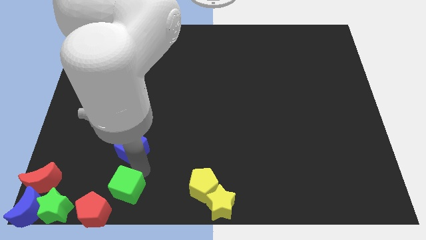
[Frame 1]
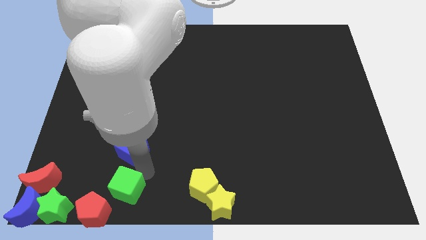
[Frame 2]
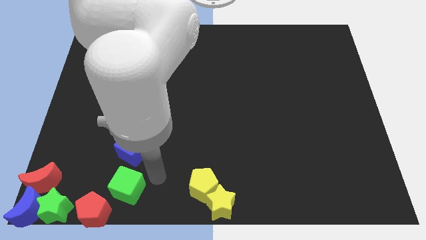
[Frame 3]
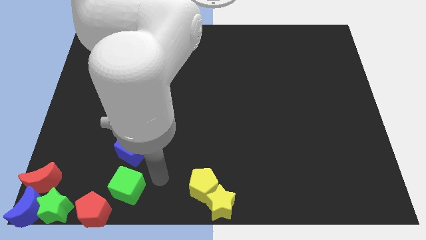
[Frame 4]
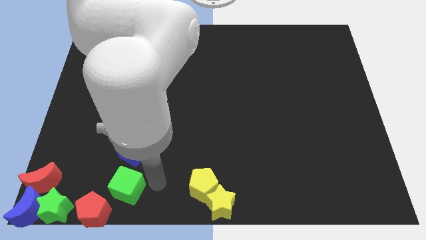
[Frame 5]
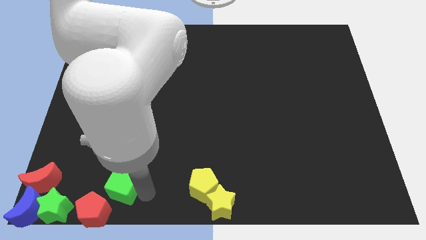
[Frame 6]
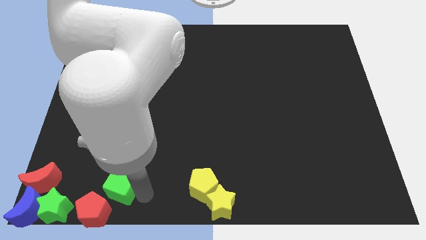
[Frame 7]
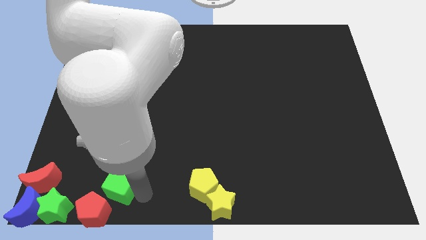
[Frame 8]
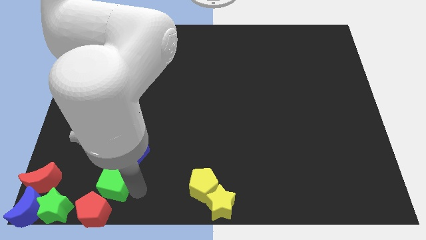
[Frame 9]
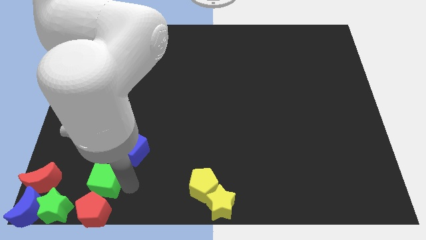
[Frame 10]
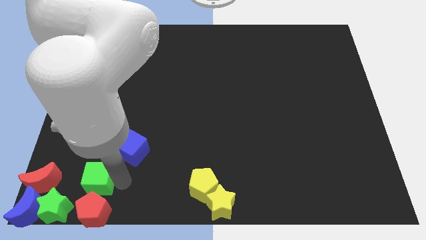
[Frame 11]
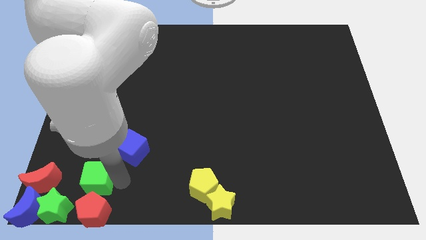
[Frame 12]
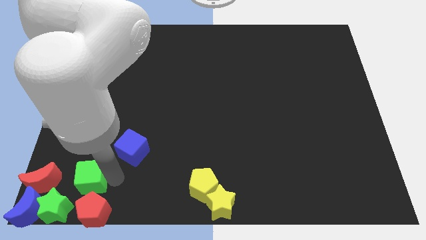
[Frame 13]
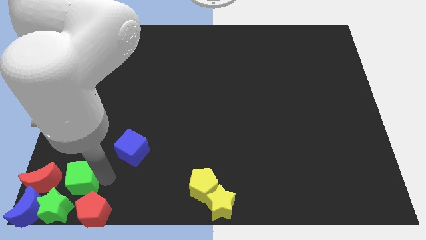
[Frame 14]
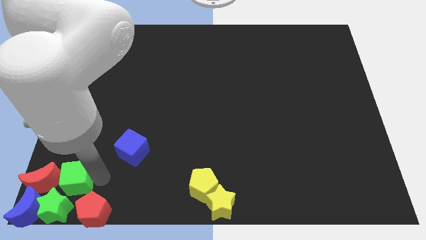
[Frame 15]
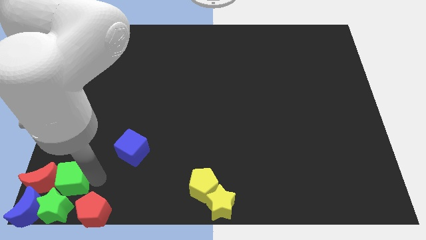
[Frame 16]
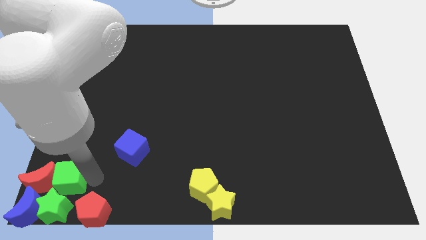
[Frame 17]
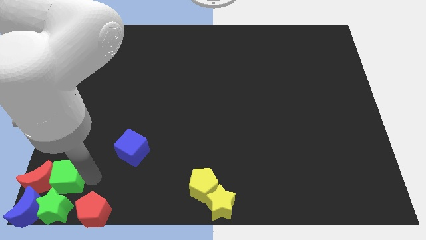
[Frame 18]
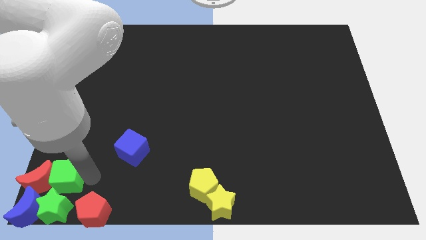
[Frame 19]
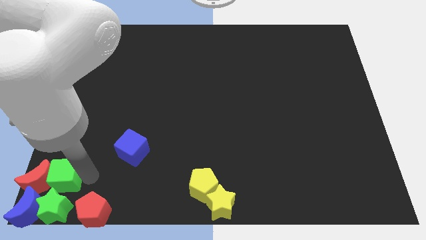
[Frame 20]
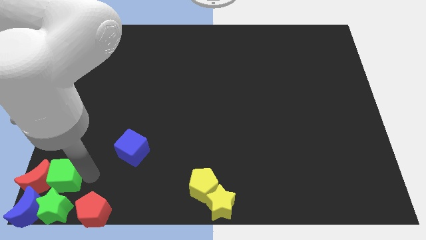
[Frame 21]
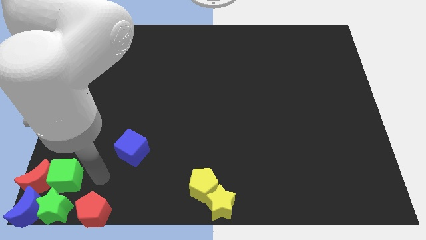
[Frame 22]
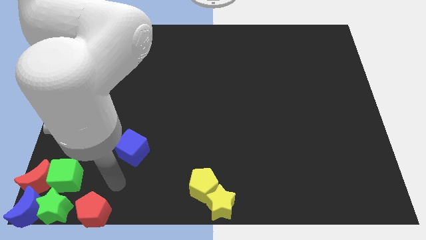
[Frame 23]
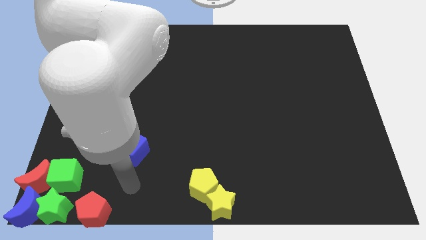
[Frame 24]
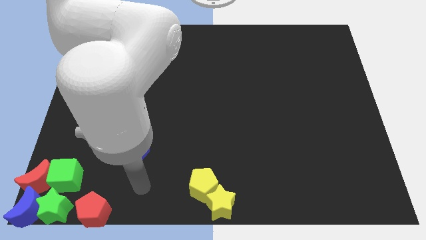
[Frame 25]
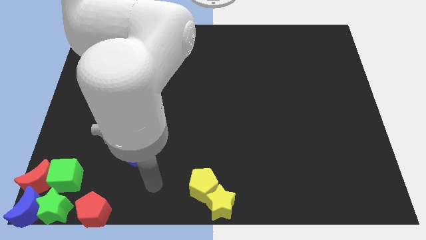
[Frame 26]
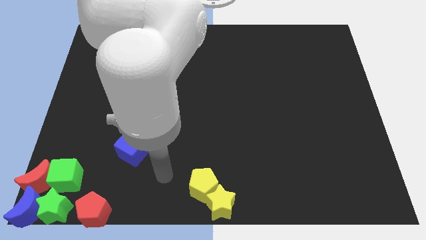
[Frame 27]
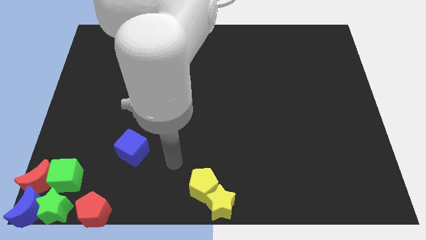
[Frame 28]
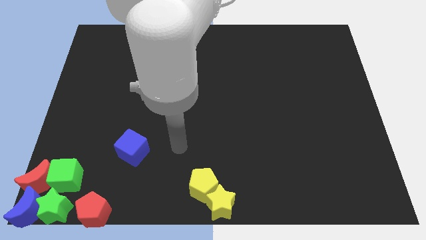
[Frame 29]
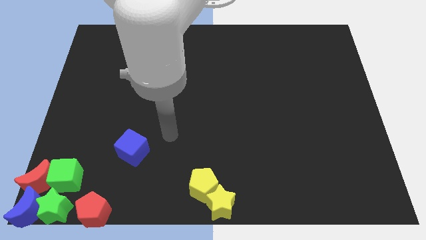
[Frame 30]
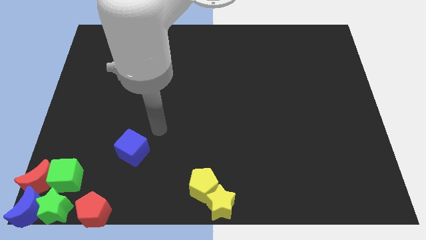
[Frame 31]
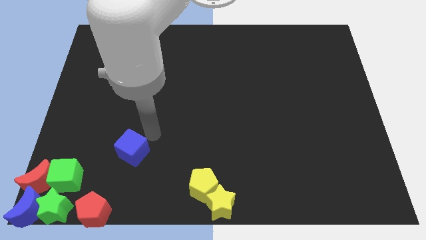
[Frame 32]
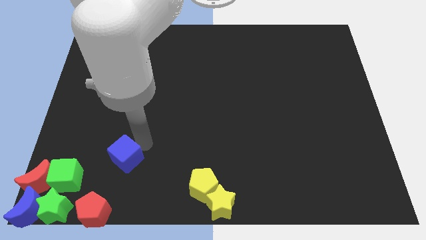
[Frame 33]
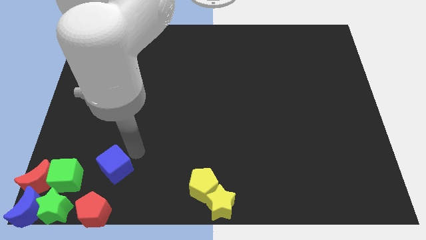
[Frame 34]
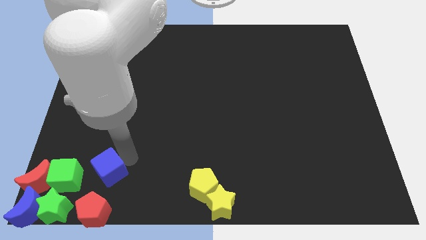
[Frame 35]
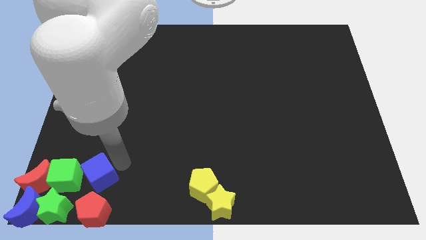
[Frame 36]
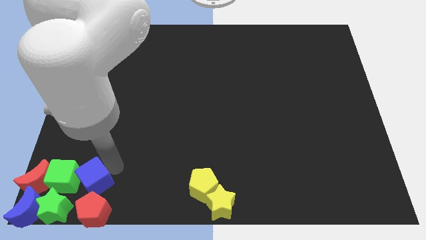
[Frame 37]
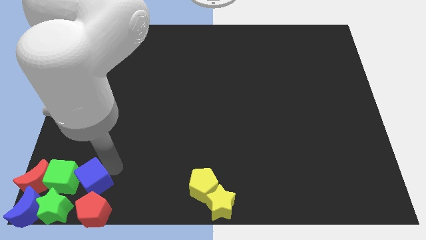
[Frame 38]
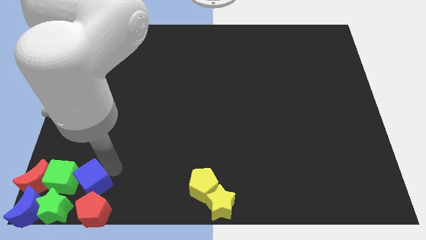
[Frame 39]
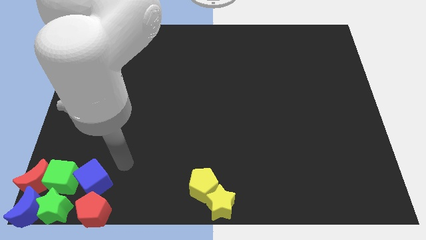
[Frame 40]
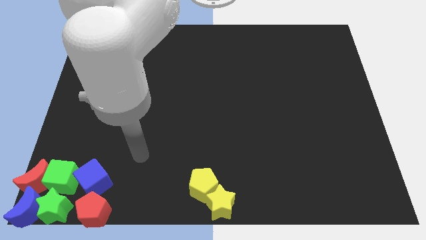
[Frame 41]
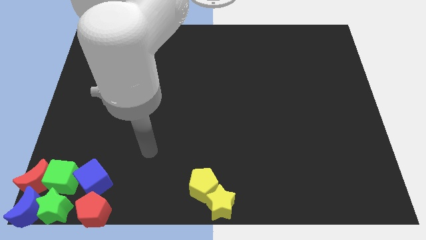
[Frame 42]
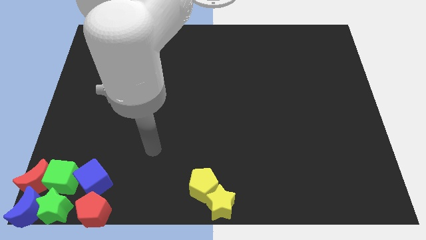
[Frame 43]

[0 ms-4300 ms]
push the blue cube into the green cube

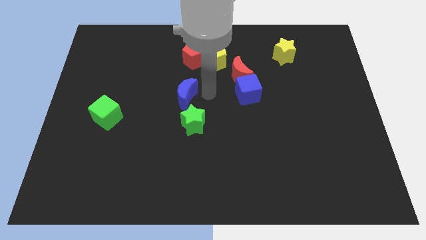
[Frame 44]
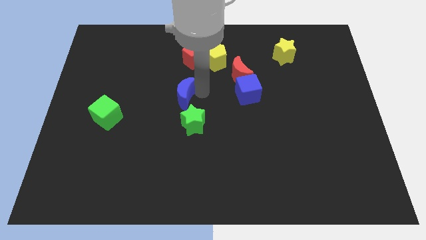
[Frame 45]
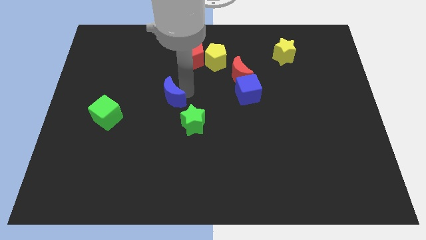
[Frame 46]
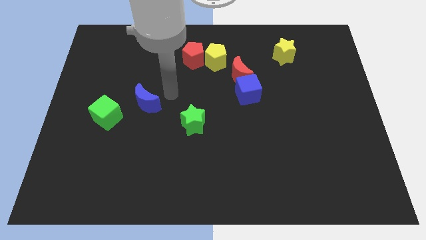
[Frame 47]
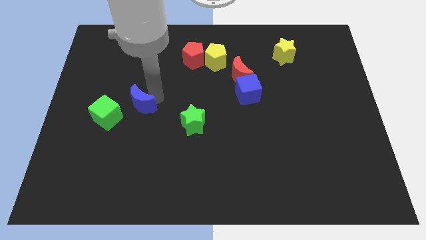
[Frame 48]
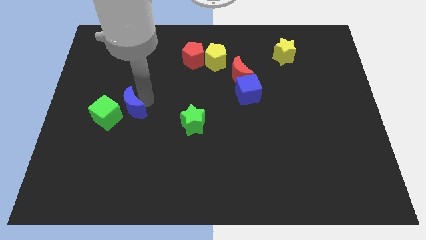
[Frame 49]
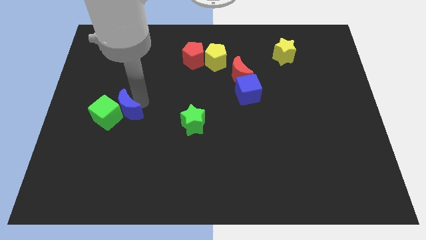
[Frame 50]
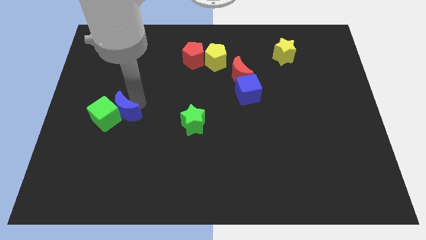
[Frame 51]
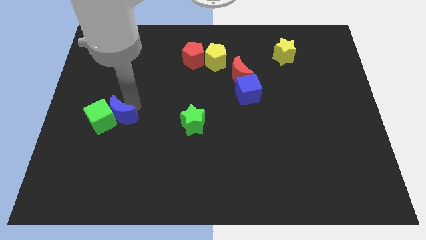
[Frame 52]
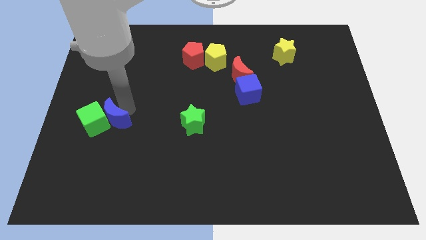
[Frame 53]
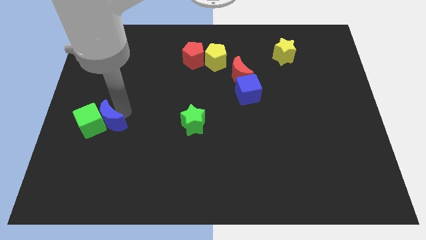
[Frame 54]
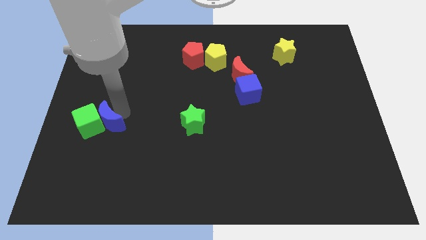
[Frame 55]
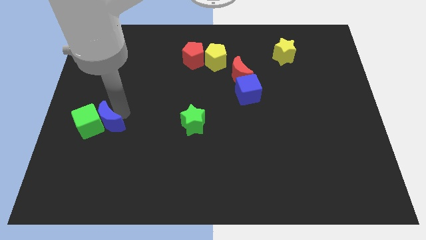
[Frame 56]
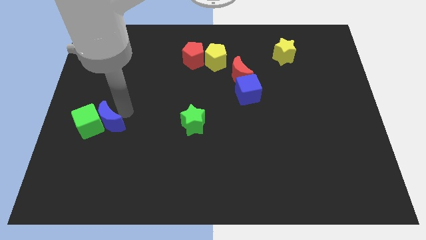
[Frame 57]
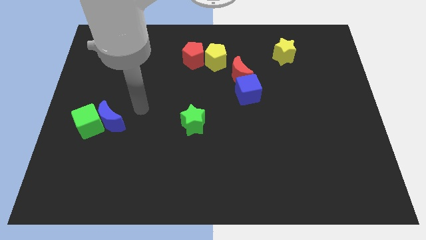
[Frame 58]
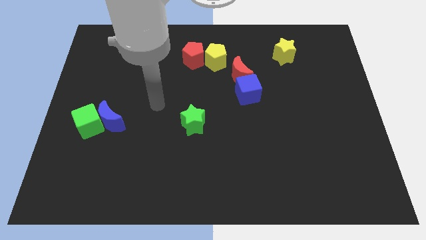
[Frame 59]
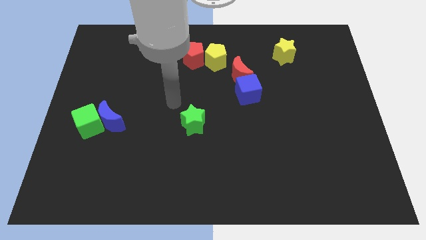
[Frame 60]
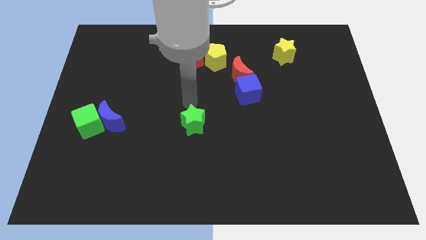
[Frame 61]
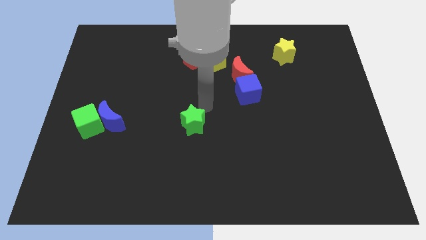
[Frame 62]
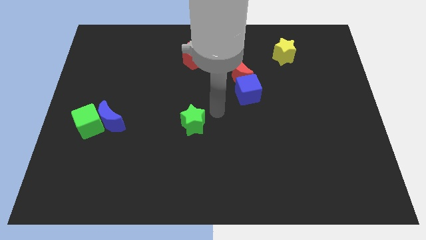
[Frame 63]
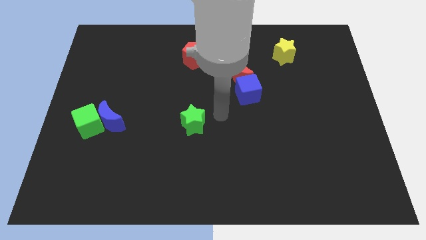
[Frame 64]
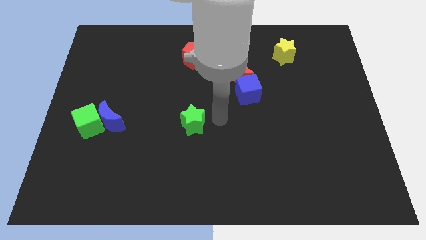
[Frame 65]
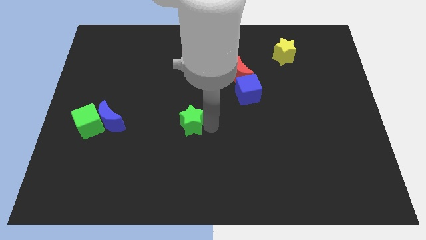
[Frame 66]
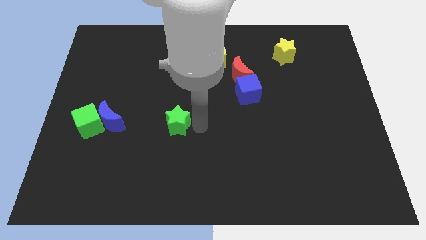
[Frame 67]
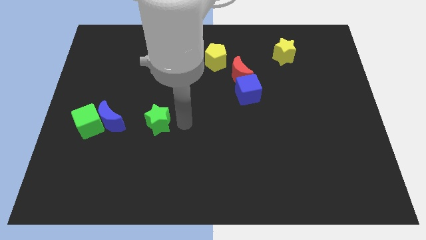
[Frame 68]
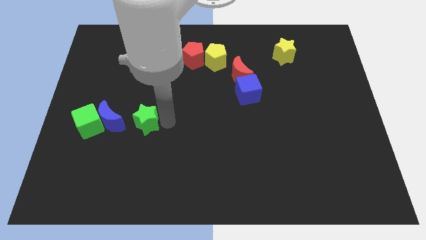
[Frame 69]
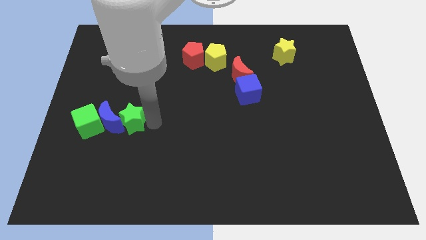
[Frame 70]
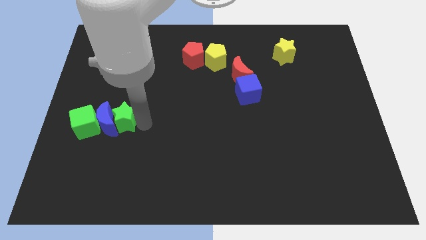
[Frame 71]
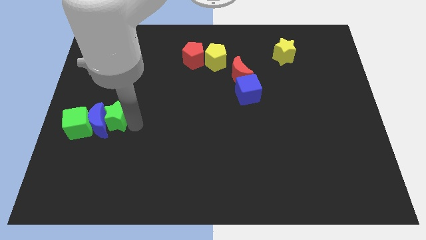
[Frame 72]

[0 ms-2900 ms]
drag the blue moon close to the green cube

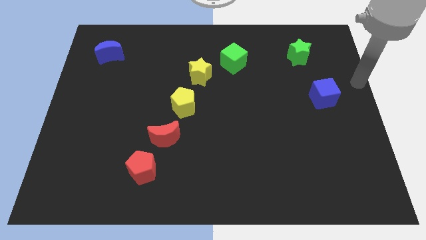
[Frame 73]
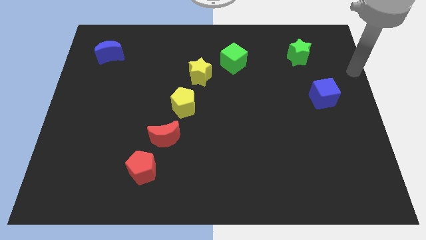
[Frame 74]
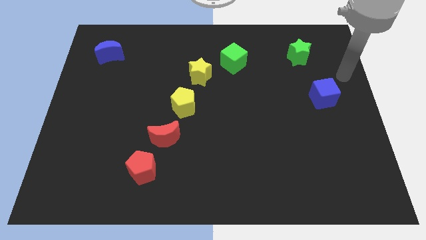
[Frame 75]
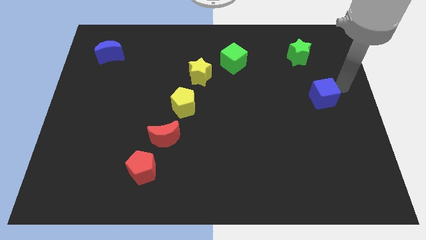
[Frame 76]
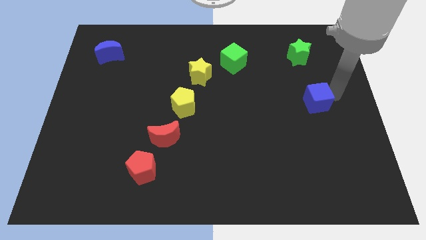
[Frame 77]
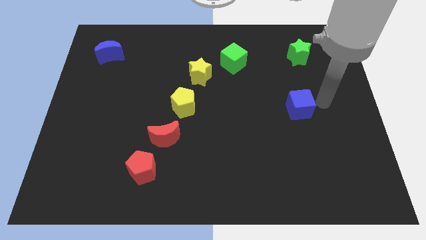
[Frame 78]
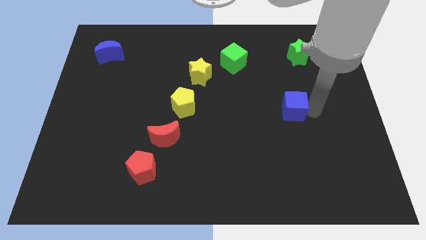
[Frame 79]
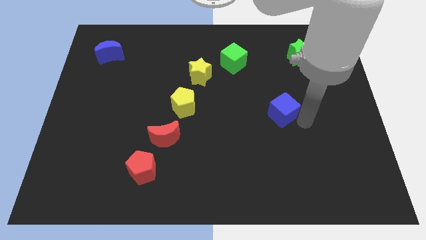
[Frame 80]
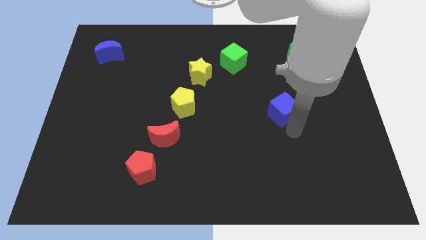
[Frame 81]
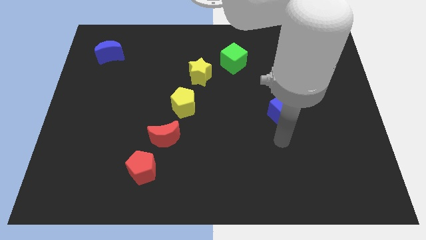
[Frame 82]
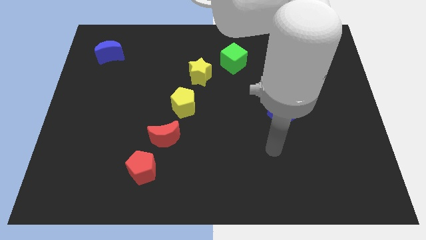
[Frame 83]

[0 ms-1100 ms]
slide blue cube slightly to the down left

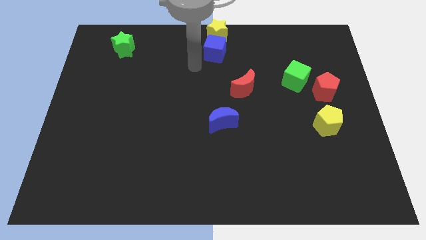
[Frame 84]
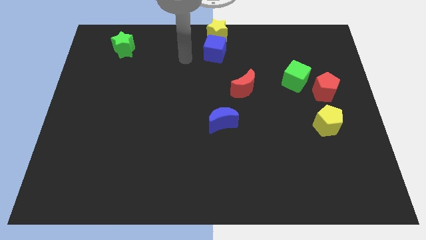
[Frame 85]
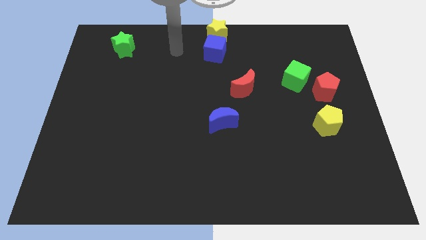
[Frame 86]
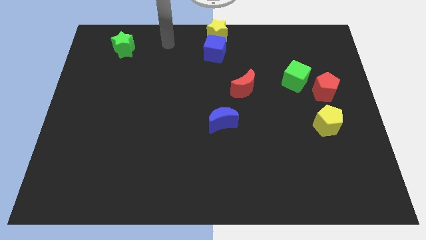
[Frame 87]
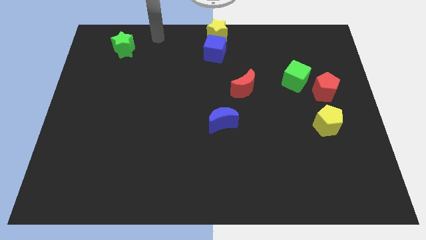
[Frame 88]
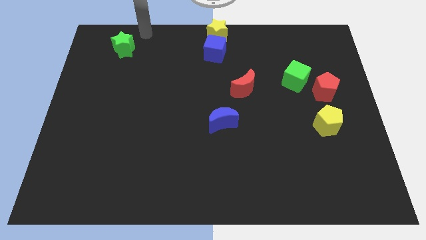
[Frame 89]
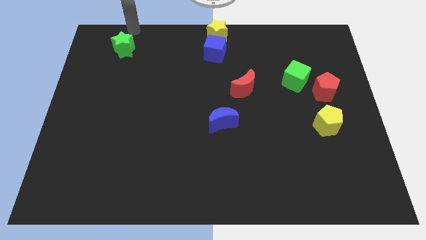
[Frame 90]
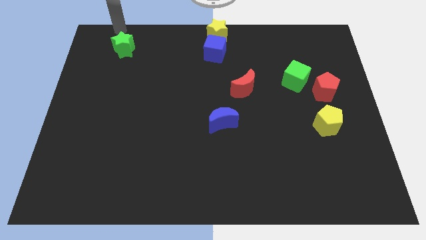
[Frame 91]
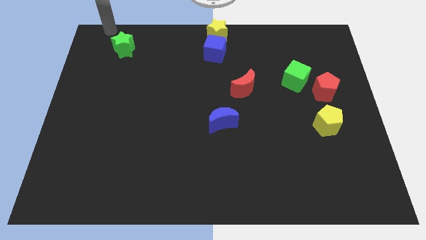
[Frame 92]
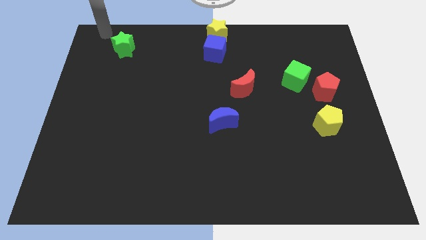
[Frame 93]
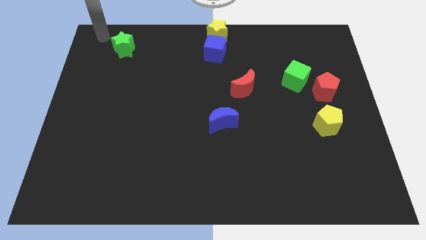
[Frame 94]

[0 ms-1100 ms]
move the arm towards the green star
